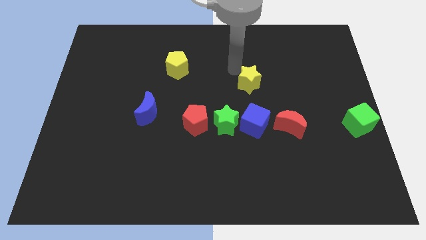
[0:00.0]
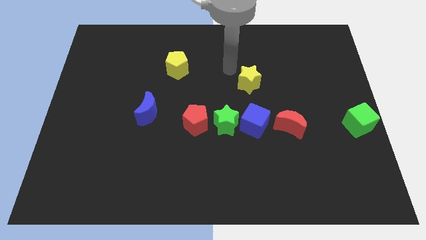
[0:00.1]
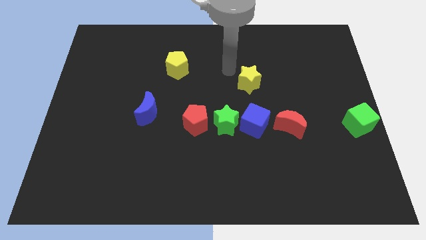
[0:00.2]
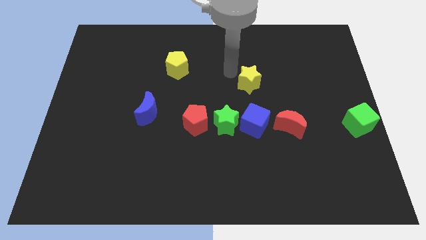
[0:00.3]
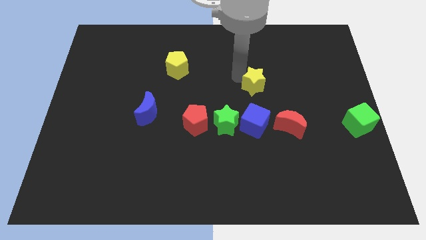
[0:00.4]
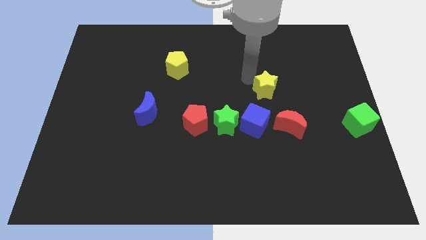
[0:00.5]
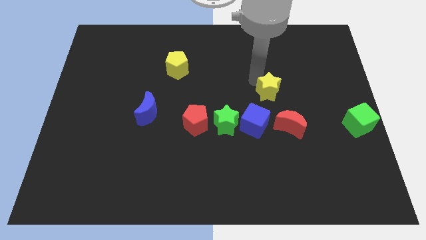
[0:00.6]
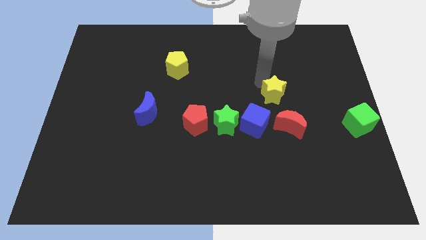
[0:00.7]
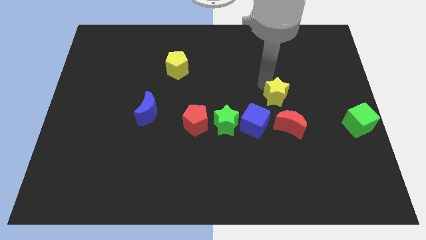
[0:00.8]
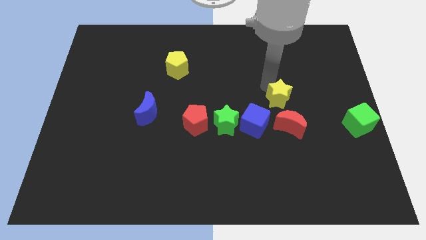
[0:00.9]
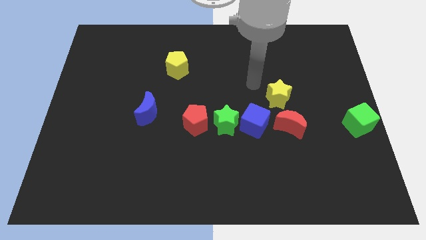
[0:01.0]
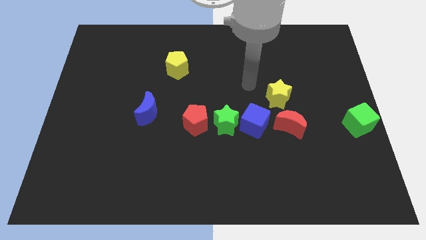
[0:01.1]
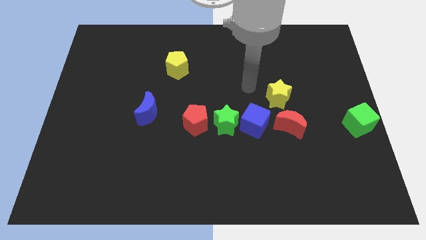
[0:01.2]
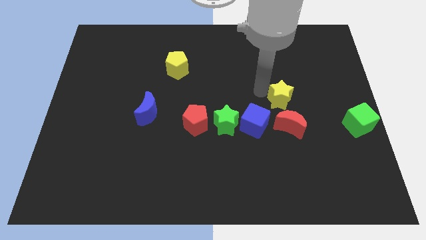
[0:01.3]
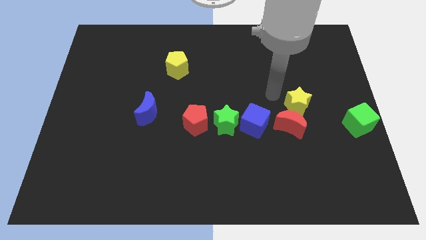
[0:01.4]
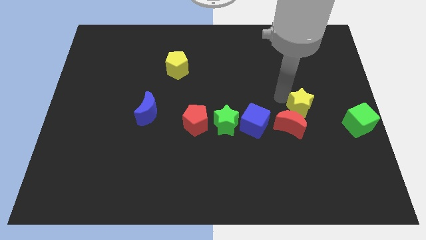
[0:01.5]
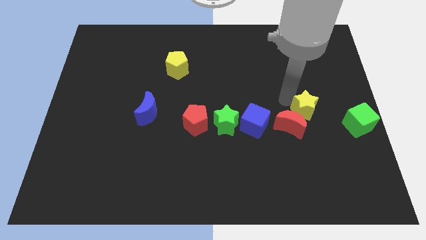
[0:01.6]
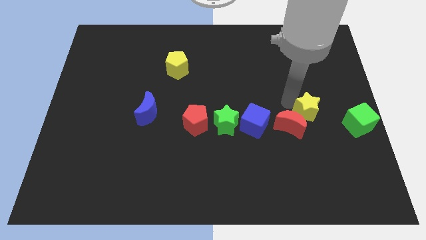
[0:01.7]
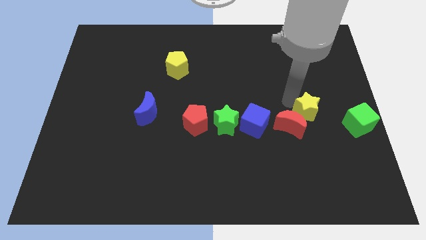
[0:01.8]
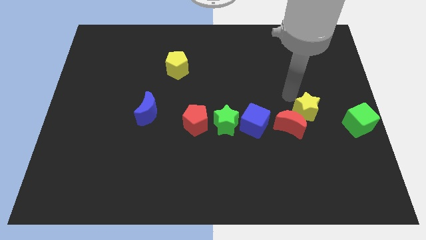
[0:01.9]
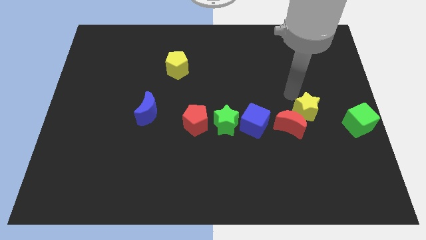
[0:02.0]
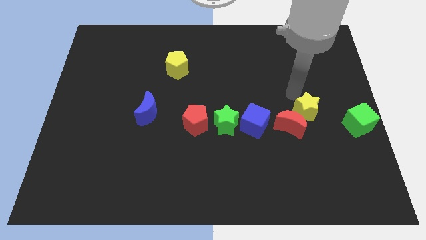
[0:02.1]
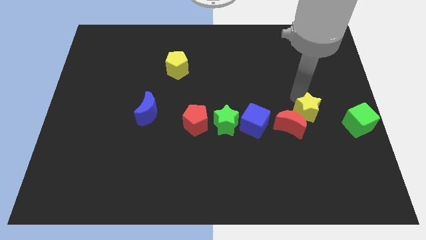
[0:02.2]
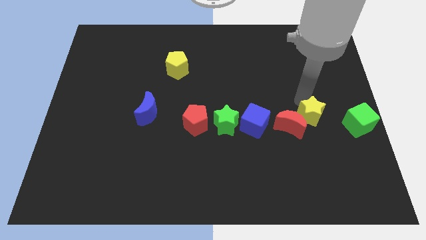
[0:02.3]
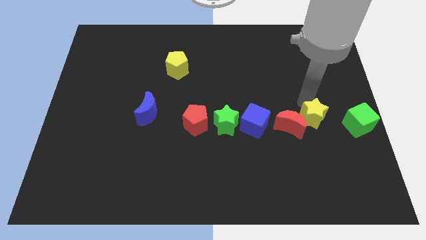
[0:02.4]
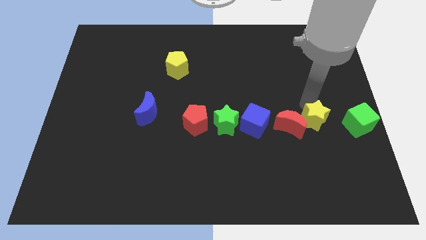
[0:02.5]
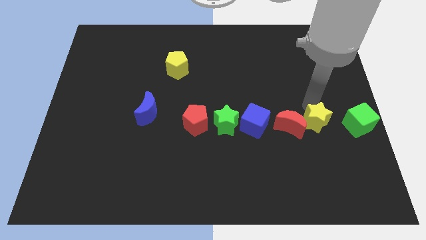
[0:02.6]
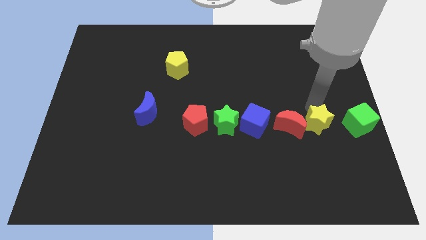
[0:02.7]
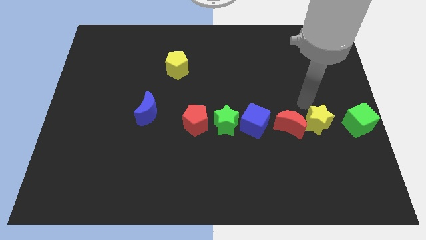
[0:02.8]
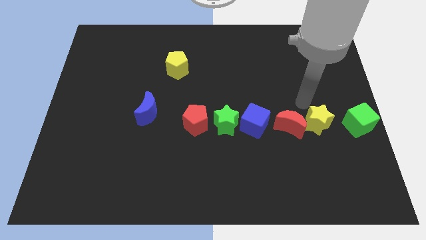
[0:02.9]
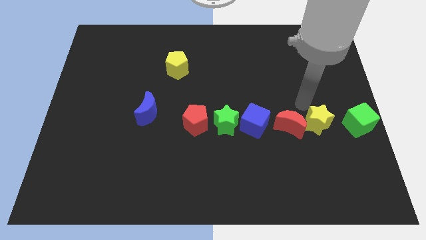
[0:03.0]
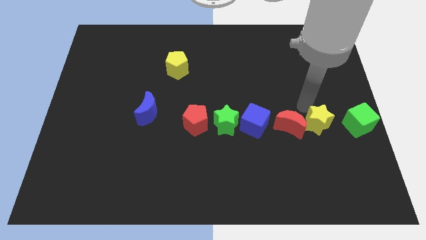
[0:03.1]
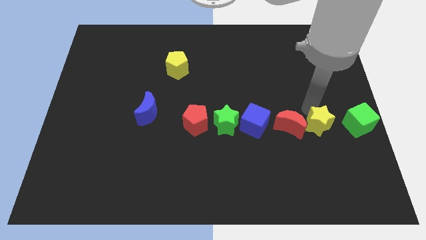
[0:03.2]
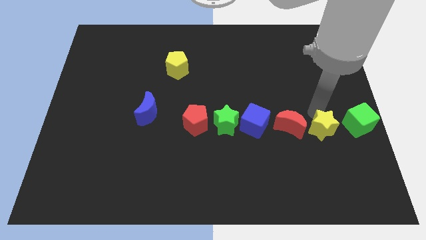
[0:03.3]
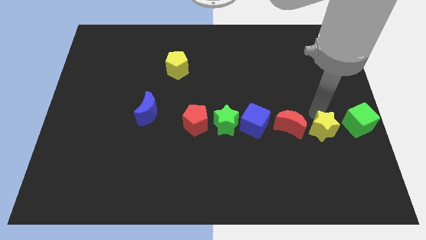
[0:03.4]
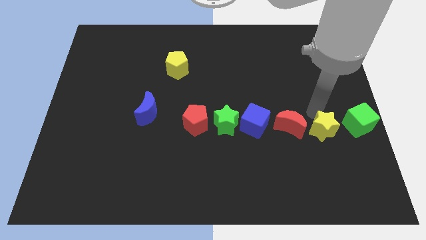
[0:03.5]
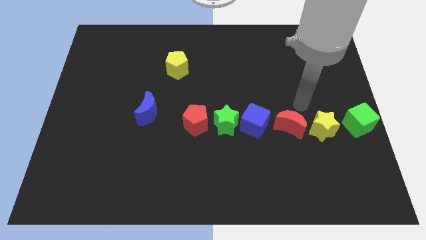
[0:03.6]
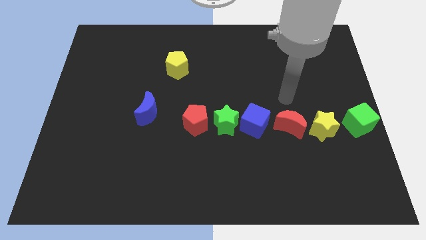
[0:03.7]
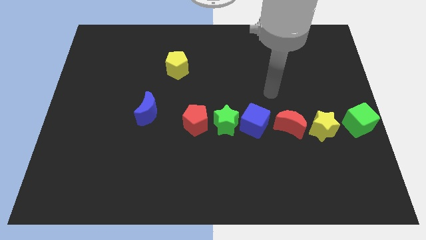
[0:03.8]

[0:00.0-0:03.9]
place the yellow star in between red moon and green cube

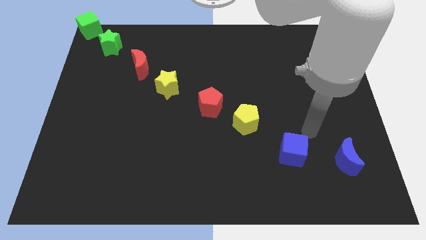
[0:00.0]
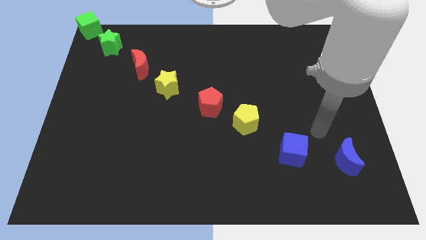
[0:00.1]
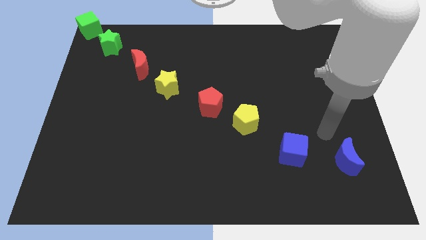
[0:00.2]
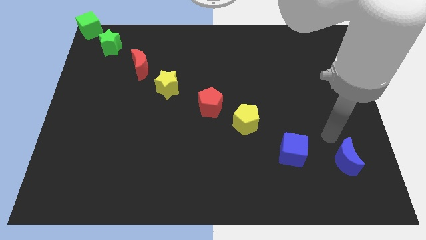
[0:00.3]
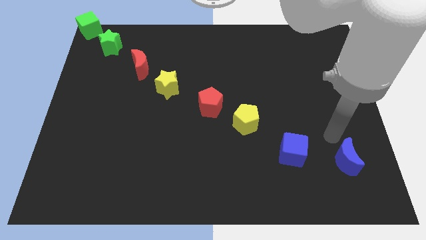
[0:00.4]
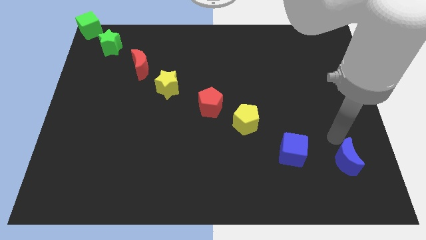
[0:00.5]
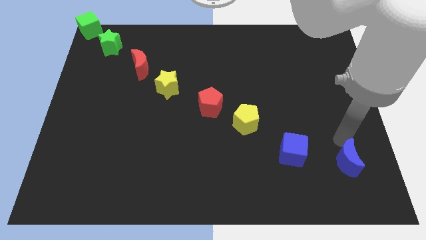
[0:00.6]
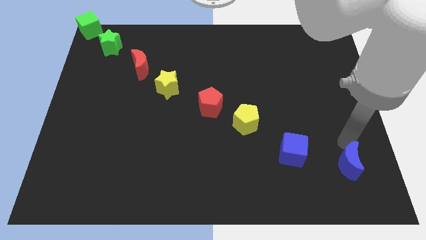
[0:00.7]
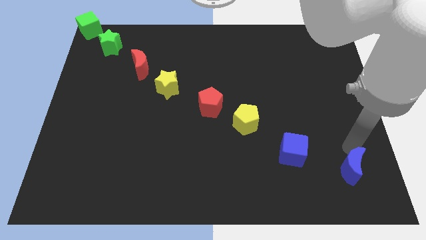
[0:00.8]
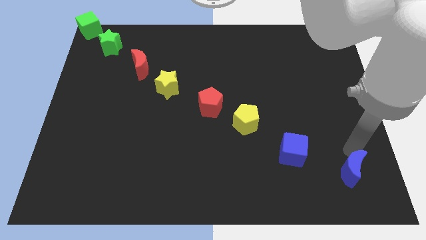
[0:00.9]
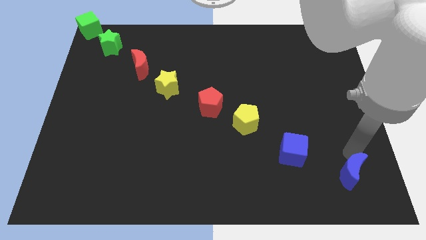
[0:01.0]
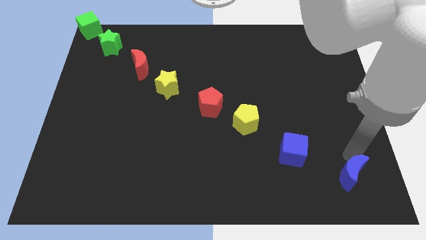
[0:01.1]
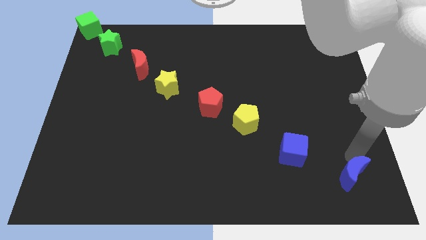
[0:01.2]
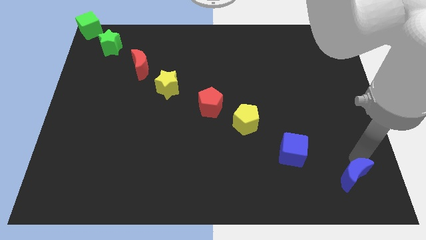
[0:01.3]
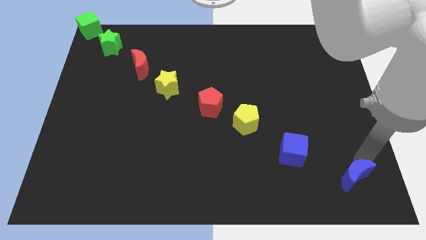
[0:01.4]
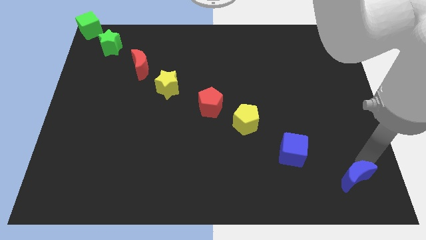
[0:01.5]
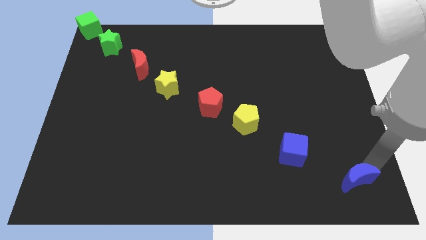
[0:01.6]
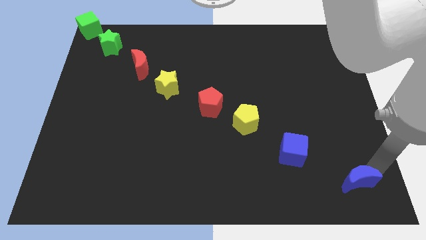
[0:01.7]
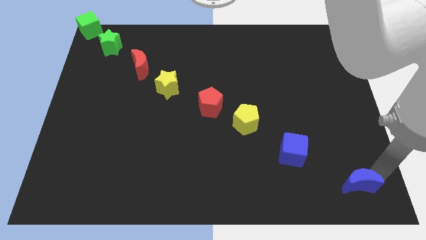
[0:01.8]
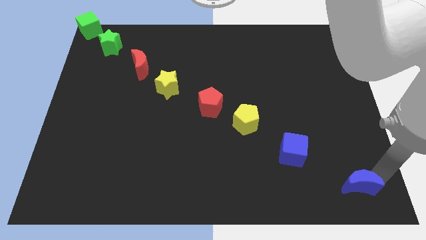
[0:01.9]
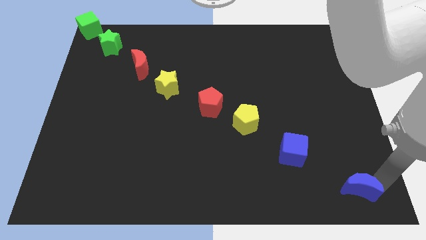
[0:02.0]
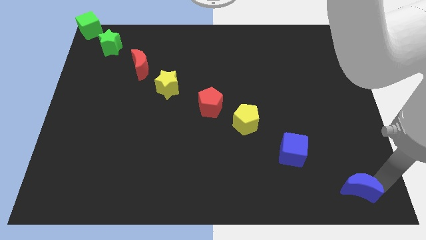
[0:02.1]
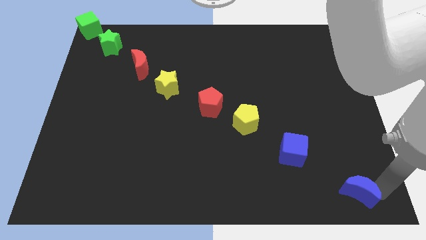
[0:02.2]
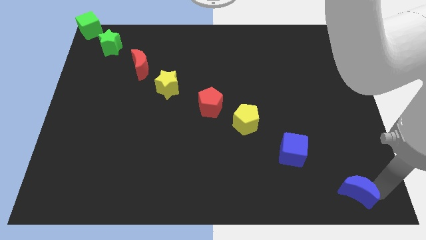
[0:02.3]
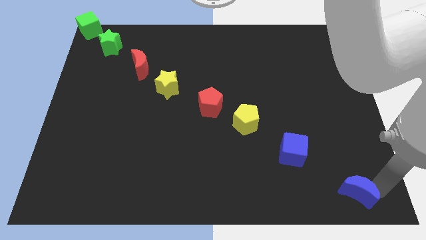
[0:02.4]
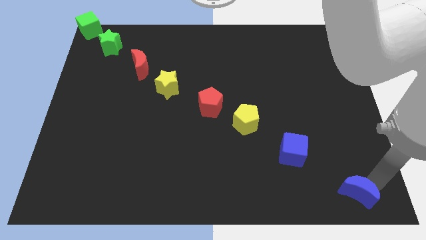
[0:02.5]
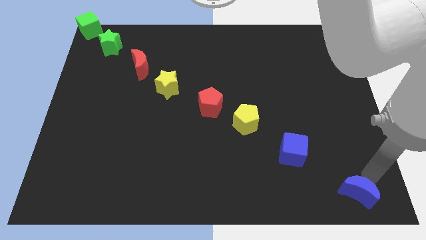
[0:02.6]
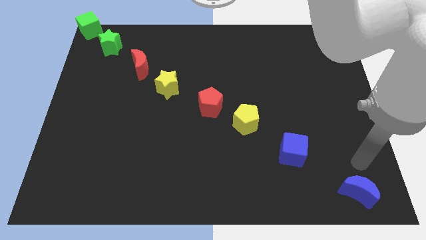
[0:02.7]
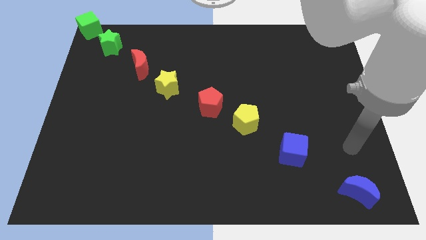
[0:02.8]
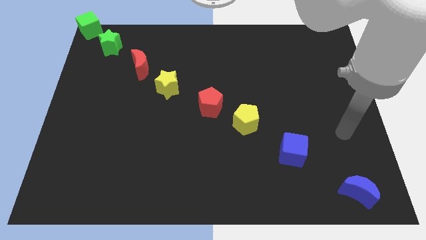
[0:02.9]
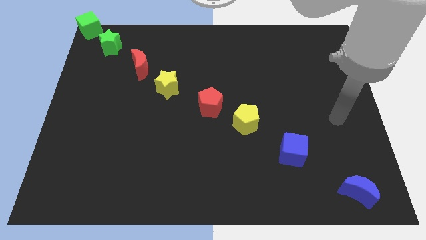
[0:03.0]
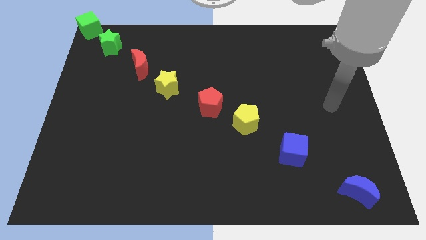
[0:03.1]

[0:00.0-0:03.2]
push the blue crescent bottom right of the board

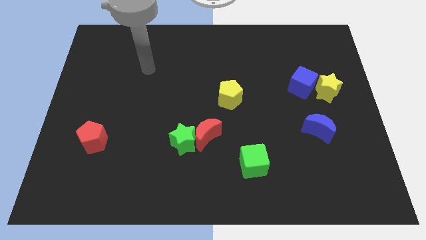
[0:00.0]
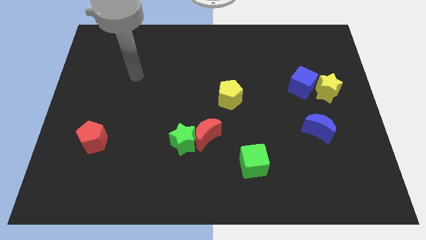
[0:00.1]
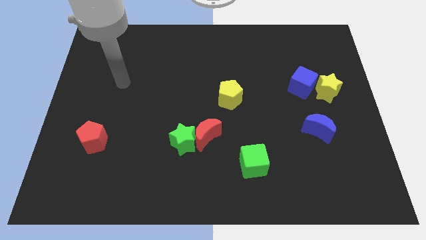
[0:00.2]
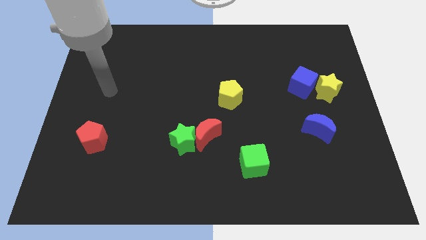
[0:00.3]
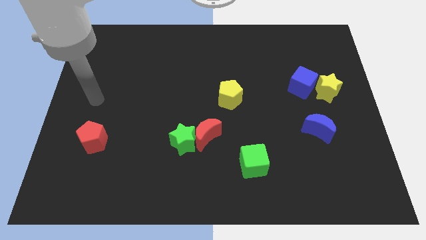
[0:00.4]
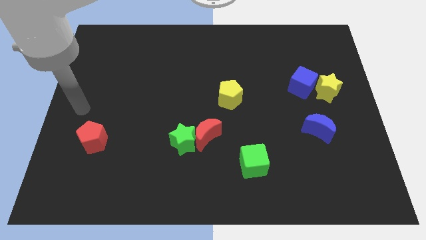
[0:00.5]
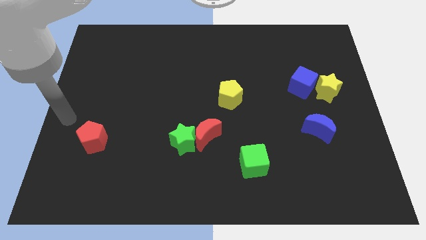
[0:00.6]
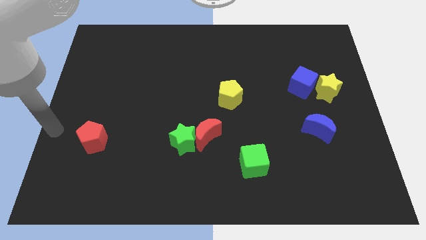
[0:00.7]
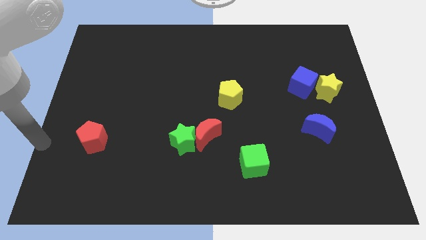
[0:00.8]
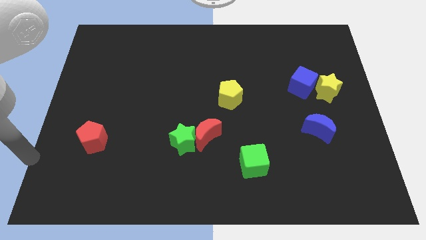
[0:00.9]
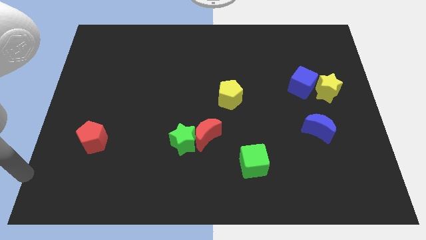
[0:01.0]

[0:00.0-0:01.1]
go to the bottom left side of the board

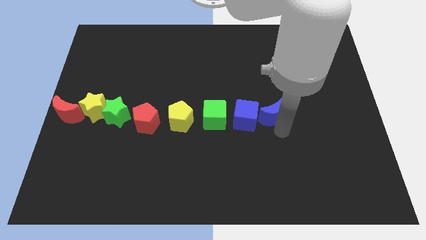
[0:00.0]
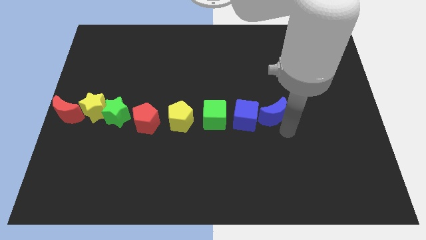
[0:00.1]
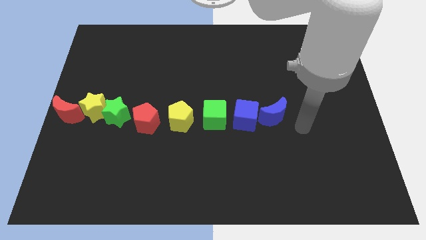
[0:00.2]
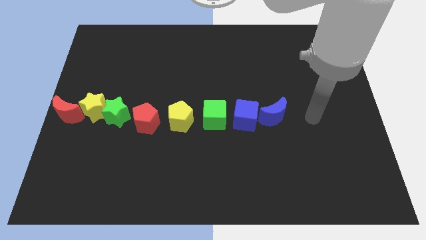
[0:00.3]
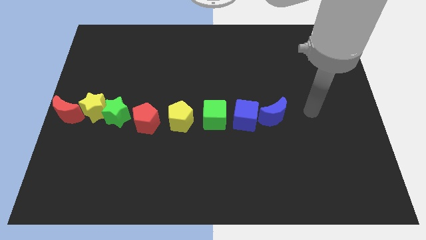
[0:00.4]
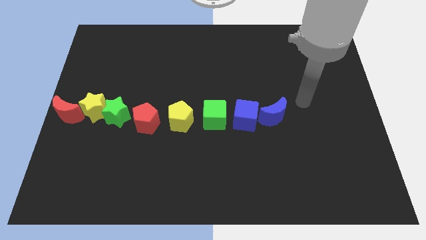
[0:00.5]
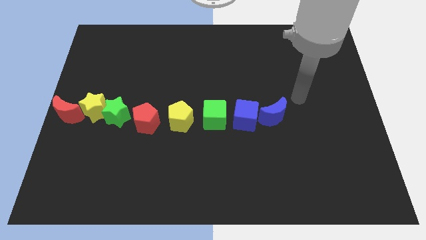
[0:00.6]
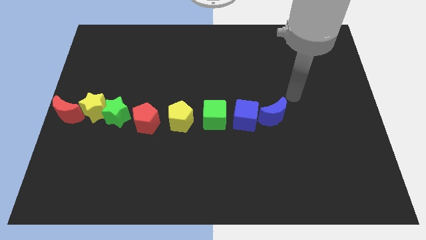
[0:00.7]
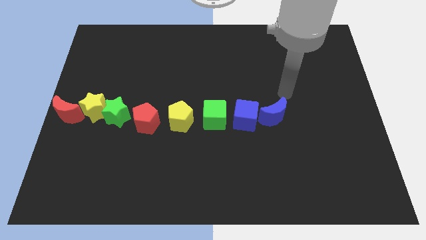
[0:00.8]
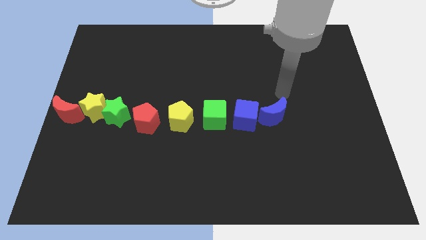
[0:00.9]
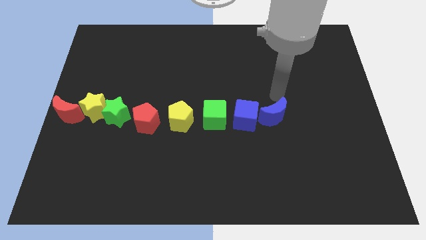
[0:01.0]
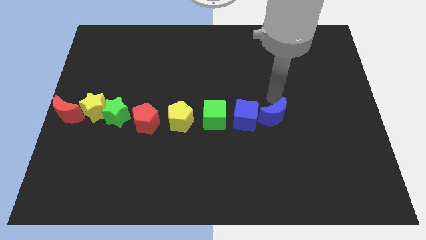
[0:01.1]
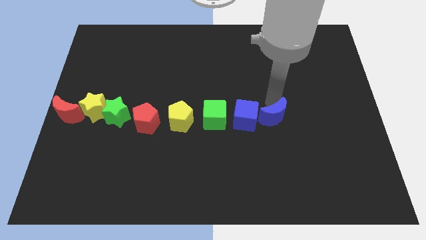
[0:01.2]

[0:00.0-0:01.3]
move your arm to the top of blue moon
